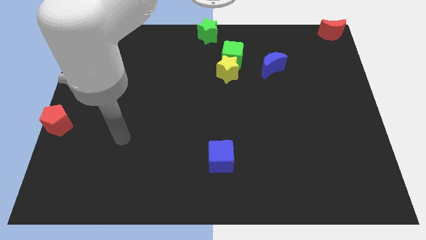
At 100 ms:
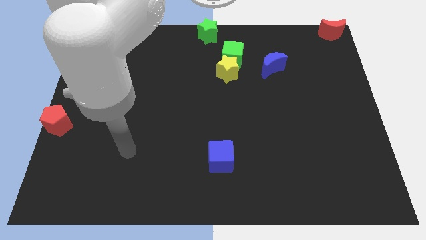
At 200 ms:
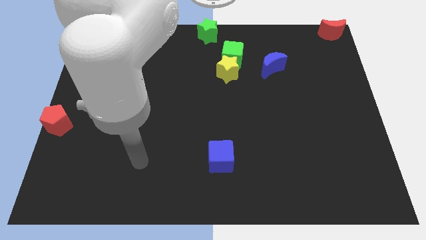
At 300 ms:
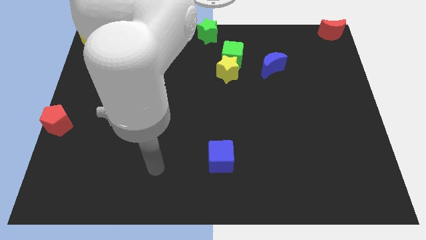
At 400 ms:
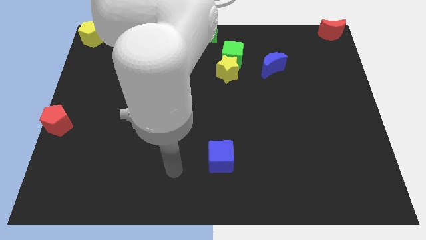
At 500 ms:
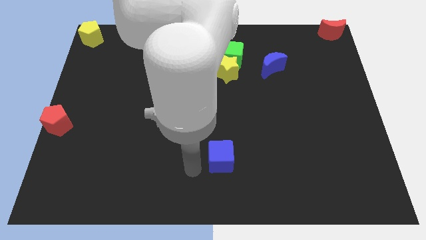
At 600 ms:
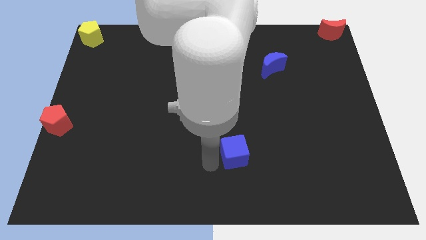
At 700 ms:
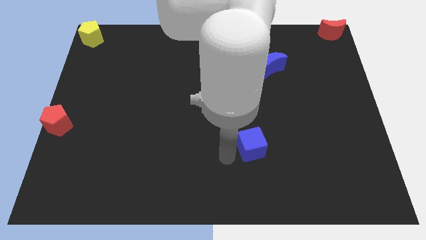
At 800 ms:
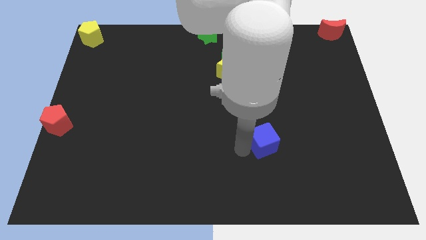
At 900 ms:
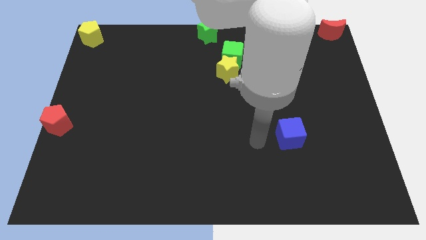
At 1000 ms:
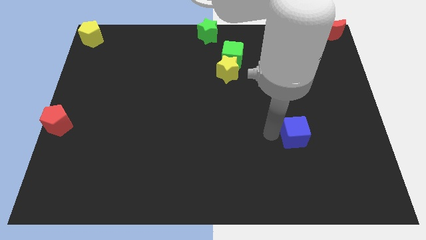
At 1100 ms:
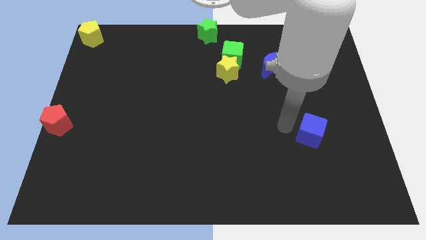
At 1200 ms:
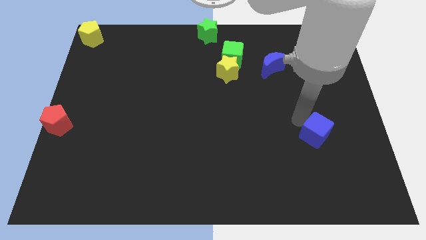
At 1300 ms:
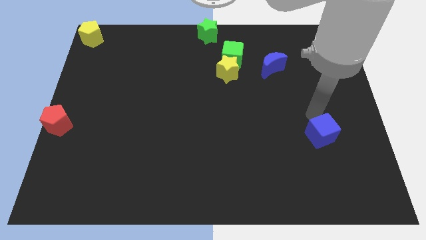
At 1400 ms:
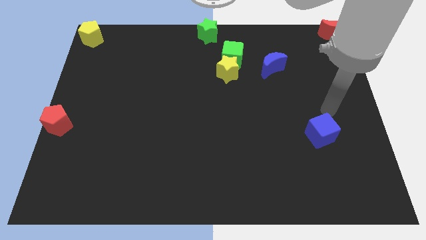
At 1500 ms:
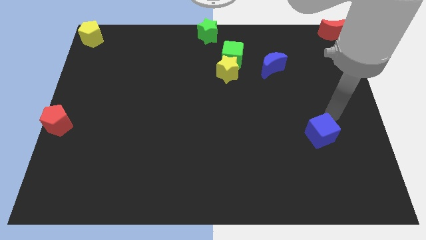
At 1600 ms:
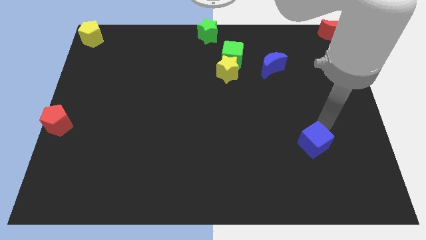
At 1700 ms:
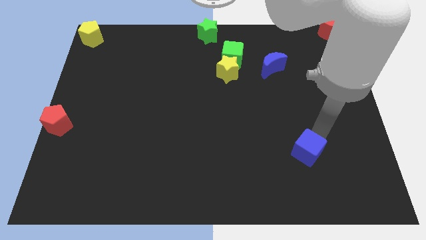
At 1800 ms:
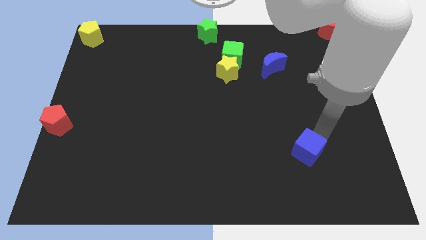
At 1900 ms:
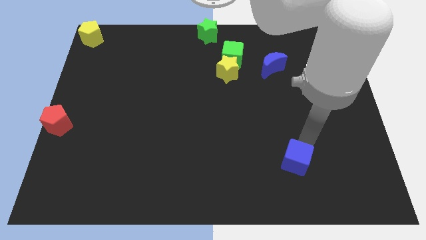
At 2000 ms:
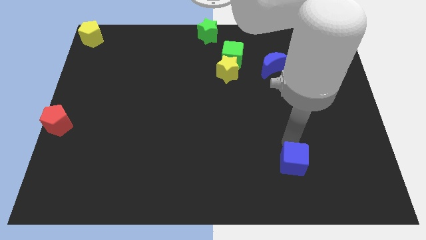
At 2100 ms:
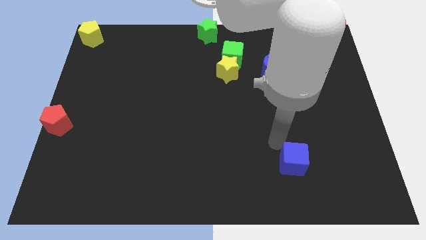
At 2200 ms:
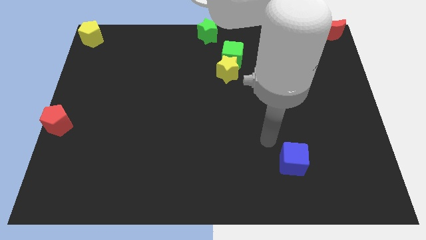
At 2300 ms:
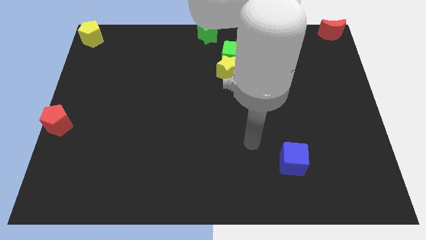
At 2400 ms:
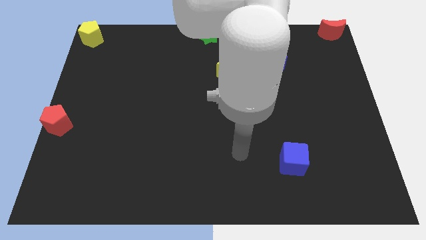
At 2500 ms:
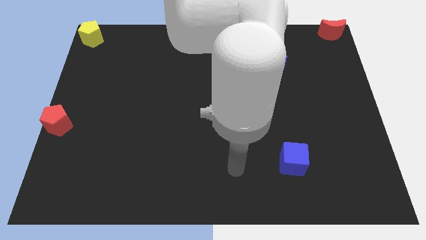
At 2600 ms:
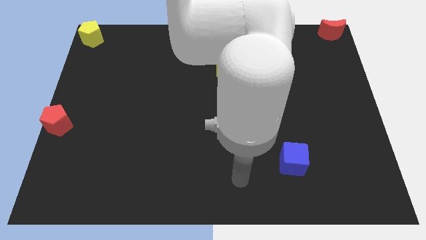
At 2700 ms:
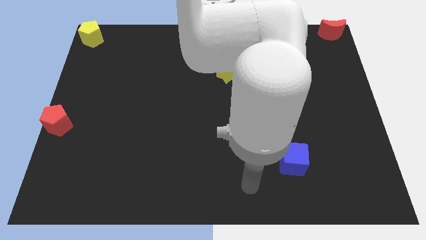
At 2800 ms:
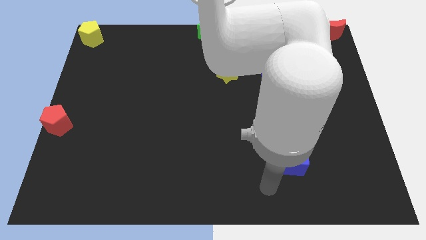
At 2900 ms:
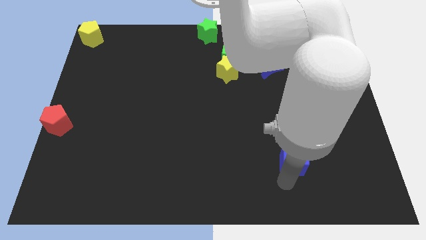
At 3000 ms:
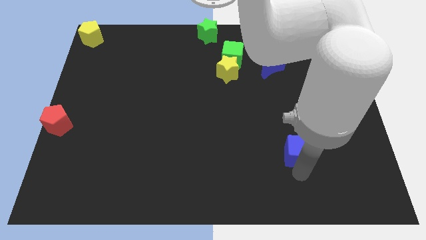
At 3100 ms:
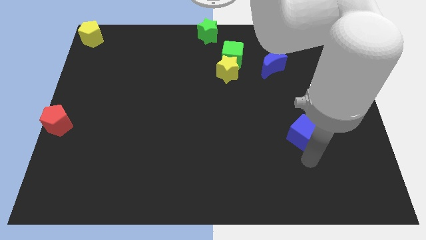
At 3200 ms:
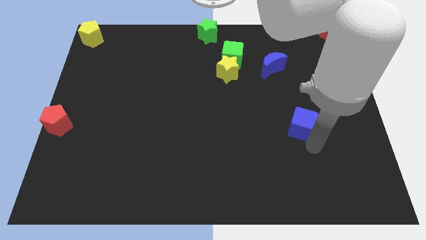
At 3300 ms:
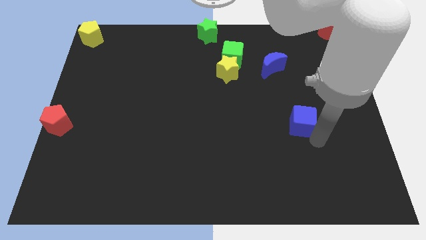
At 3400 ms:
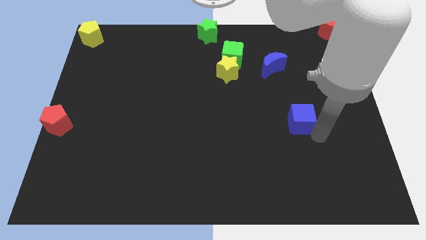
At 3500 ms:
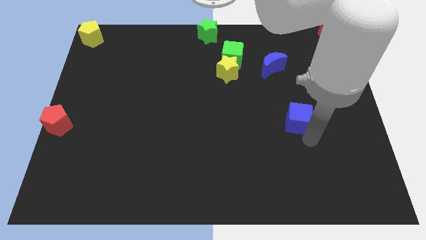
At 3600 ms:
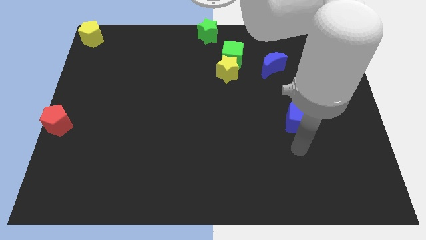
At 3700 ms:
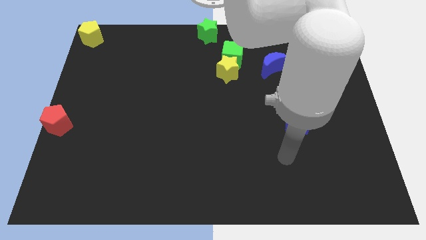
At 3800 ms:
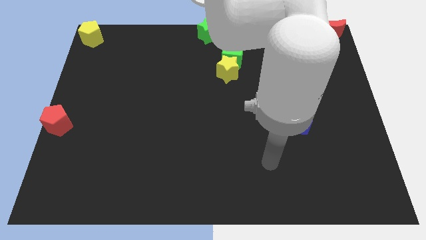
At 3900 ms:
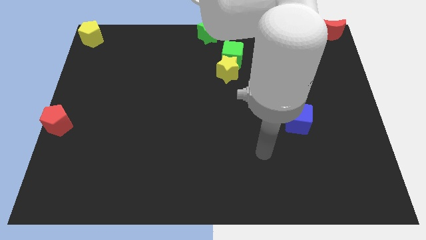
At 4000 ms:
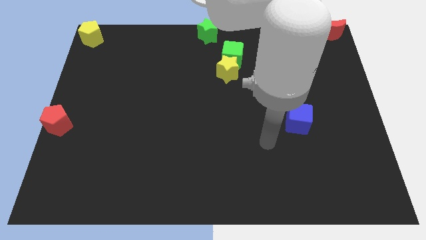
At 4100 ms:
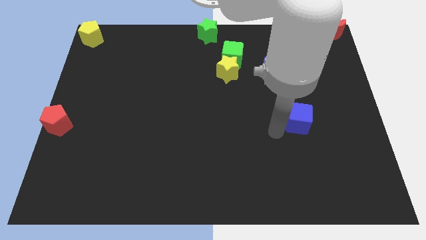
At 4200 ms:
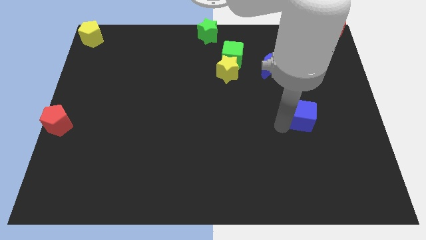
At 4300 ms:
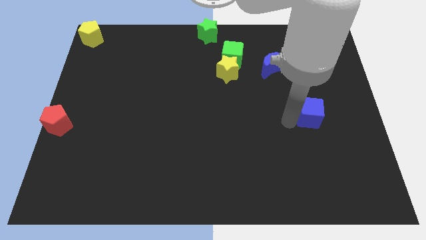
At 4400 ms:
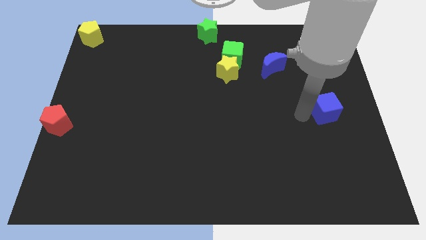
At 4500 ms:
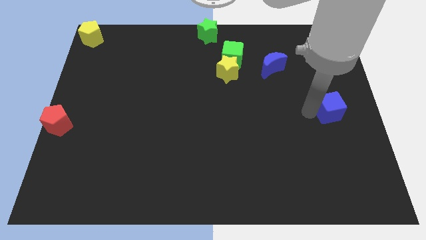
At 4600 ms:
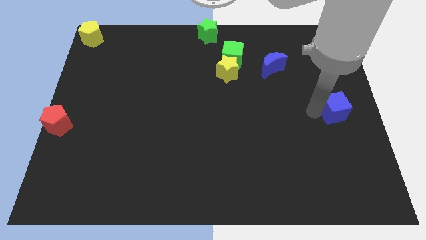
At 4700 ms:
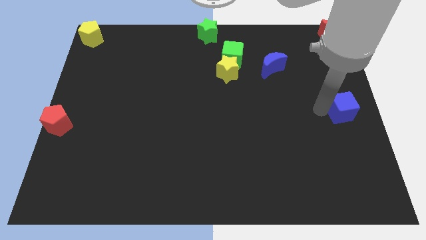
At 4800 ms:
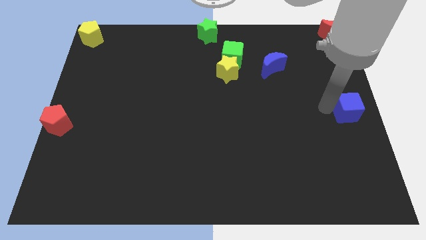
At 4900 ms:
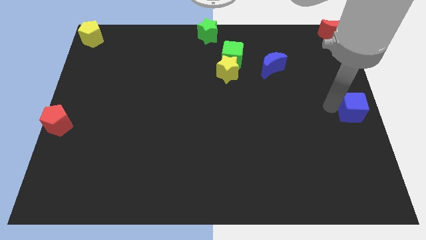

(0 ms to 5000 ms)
move the blue cube to the right center of the board

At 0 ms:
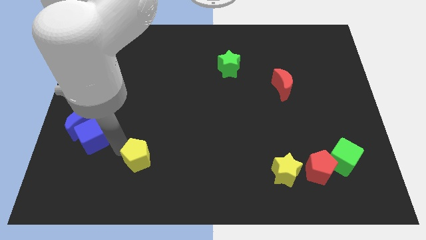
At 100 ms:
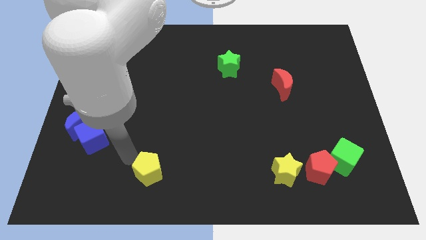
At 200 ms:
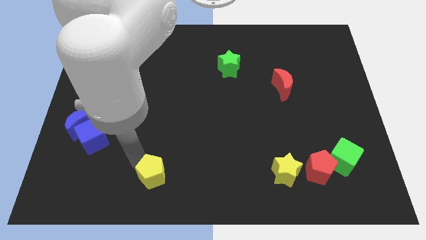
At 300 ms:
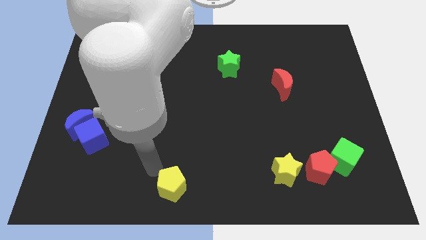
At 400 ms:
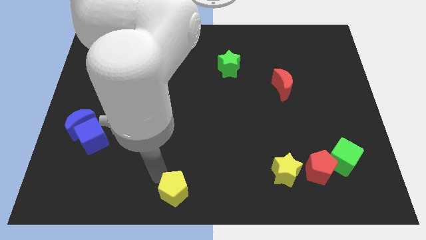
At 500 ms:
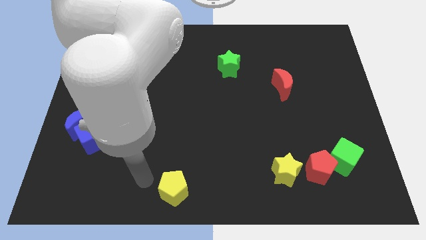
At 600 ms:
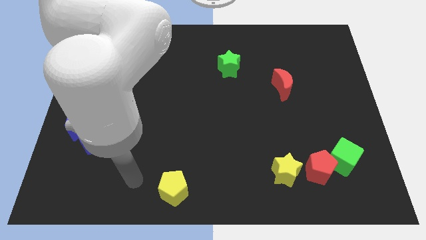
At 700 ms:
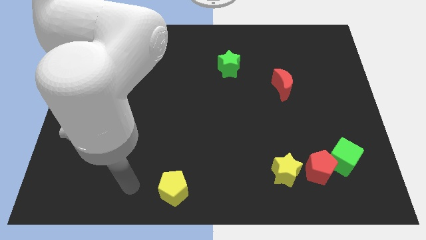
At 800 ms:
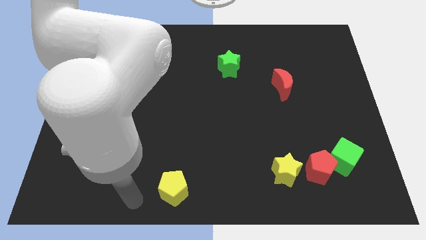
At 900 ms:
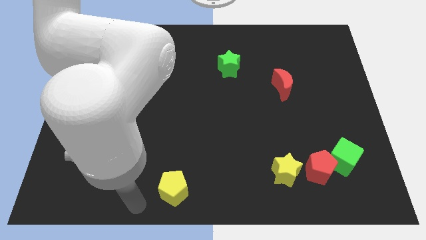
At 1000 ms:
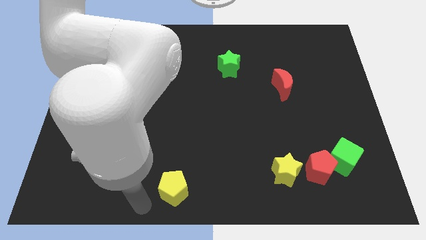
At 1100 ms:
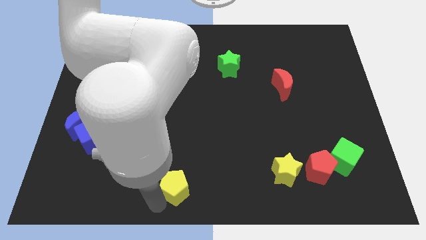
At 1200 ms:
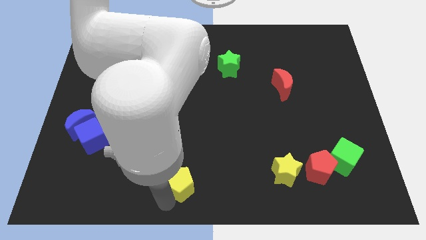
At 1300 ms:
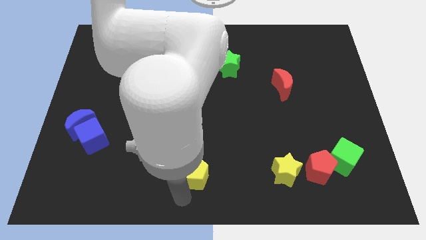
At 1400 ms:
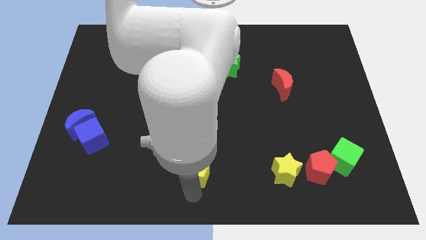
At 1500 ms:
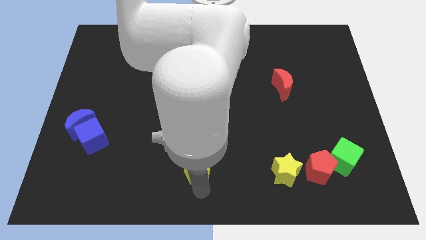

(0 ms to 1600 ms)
push the yellow pentagon to the left of the yellow star

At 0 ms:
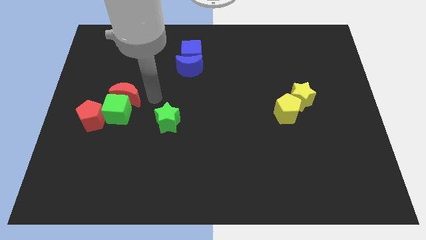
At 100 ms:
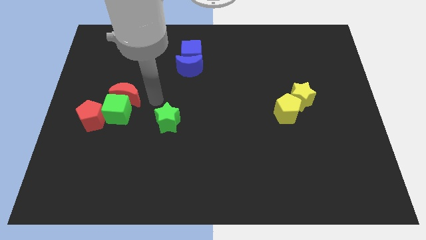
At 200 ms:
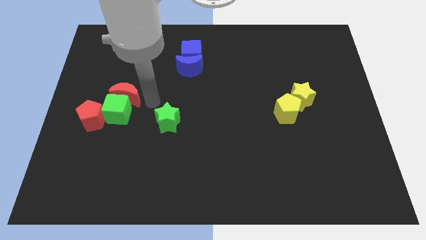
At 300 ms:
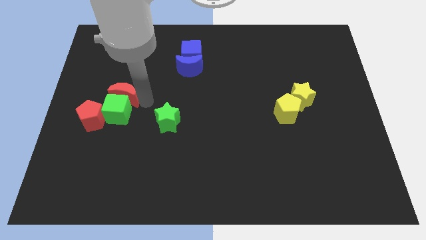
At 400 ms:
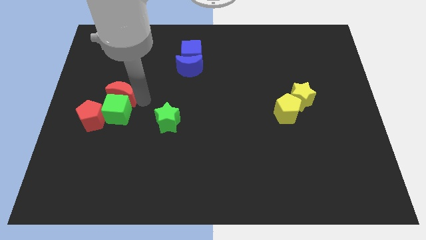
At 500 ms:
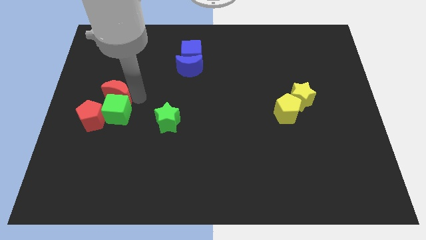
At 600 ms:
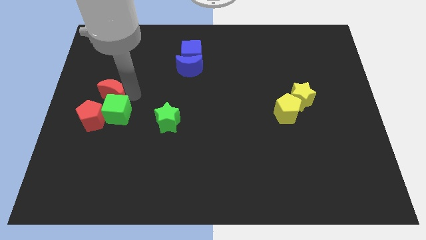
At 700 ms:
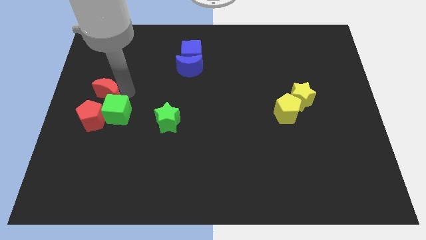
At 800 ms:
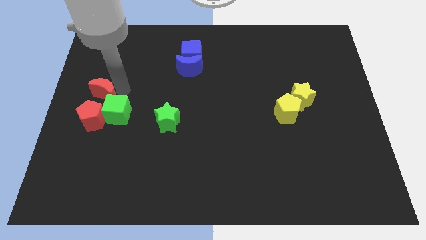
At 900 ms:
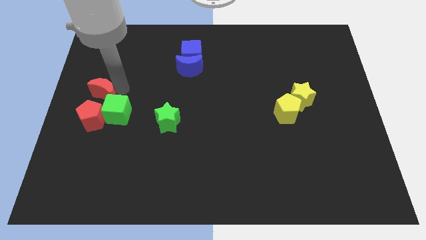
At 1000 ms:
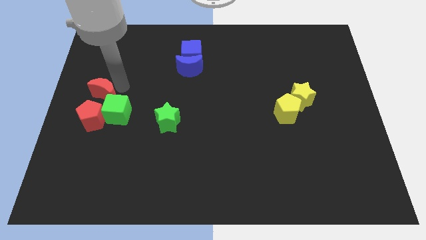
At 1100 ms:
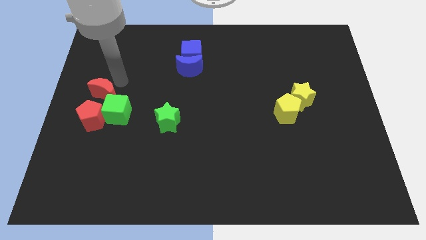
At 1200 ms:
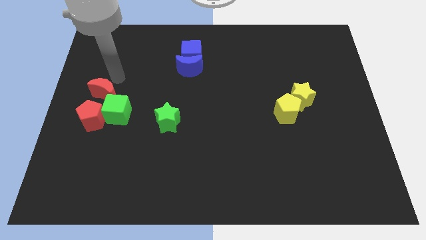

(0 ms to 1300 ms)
place red moon vertically above red pentagon

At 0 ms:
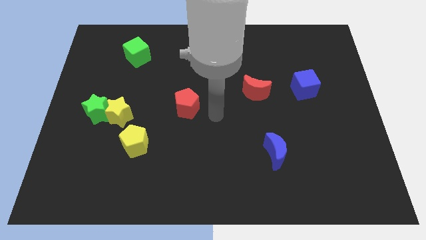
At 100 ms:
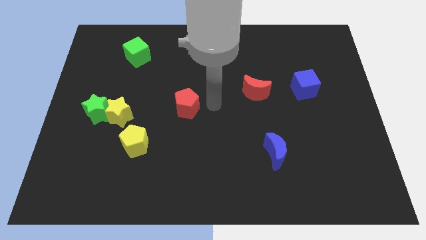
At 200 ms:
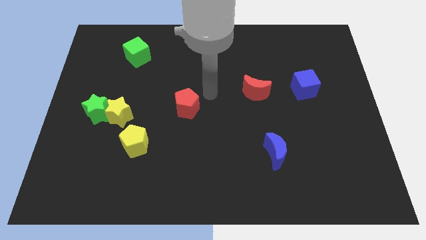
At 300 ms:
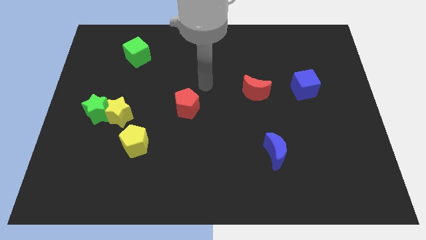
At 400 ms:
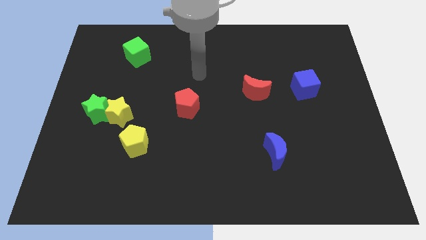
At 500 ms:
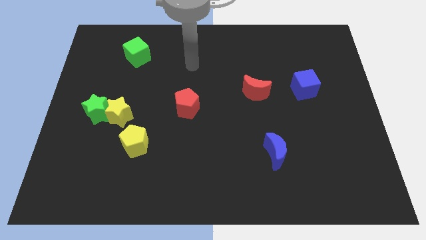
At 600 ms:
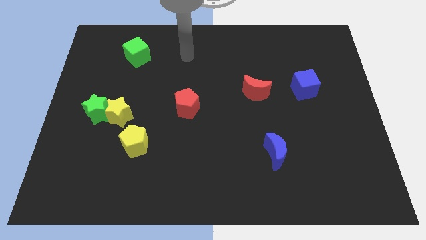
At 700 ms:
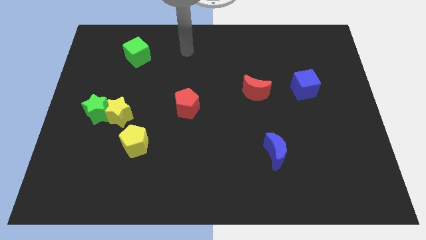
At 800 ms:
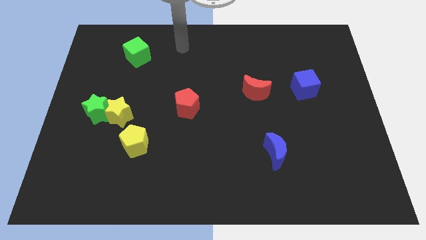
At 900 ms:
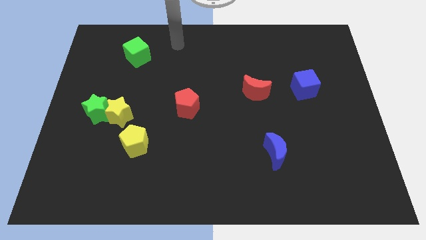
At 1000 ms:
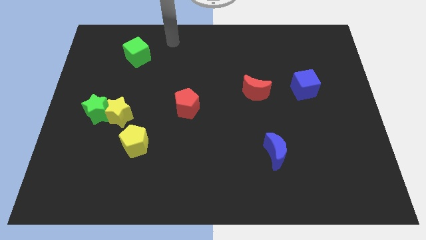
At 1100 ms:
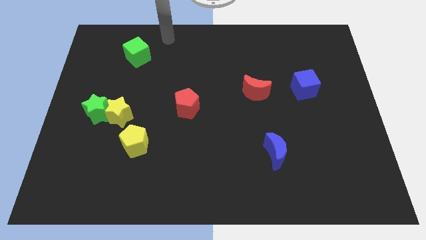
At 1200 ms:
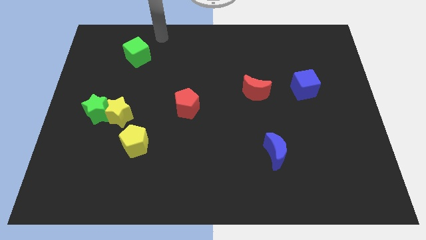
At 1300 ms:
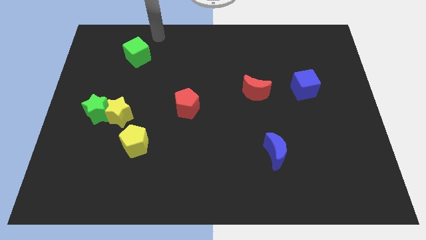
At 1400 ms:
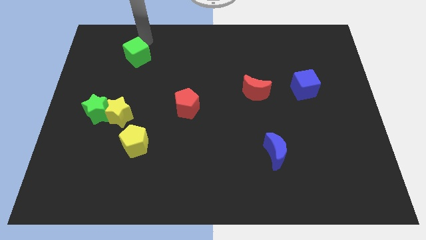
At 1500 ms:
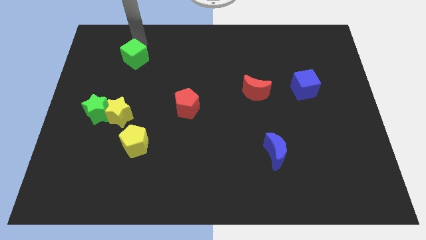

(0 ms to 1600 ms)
move the arm towards the green cube
